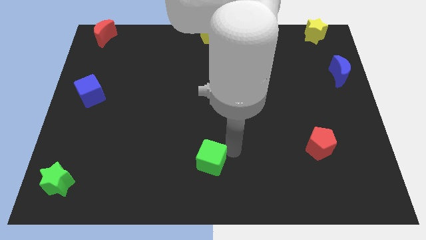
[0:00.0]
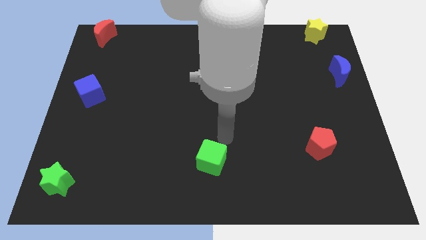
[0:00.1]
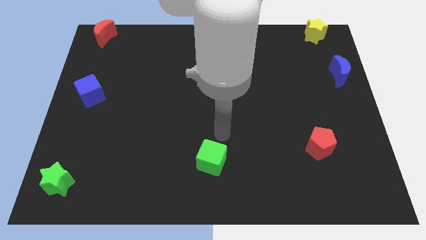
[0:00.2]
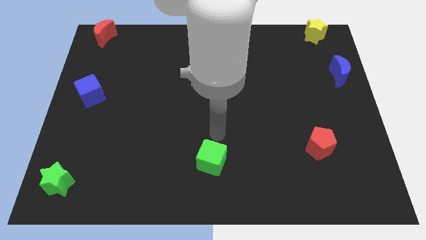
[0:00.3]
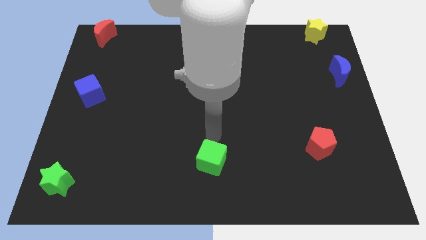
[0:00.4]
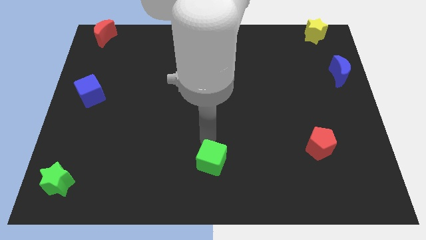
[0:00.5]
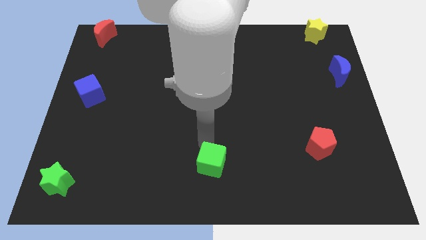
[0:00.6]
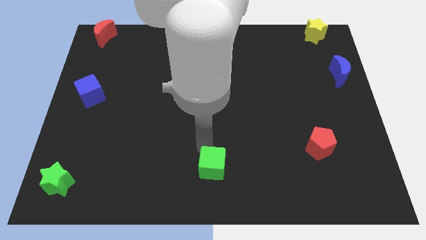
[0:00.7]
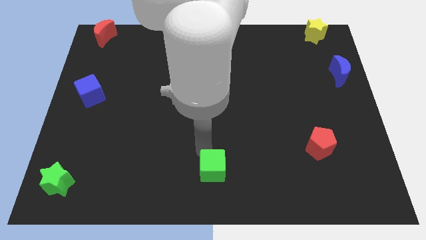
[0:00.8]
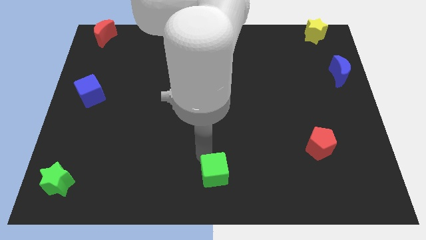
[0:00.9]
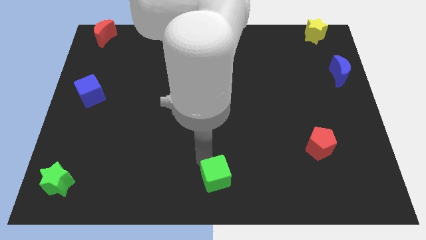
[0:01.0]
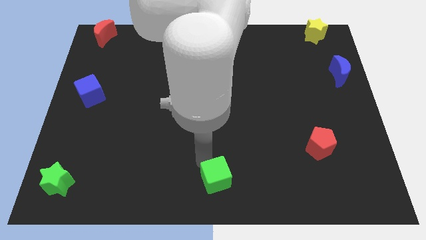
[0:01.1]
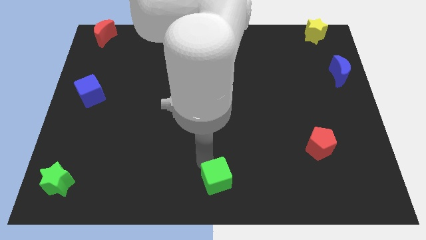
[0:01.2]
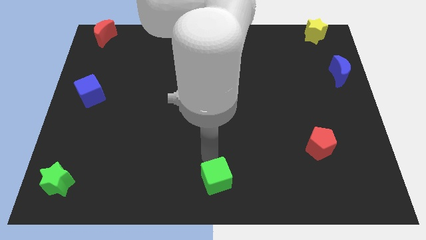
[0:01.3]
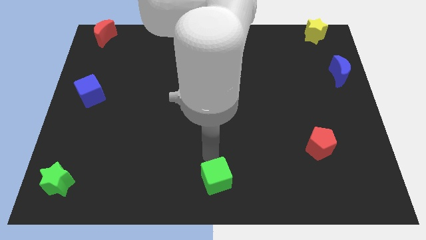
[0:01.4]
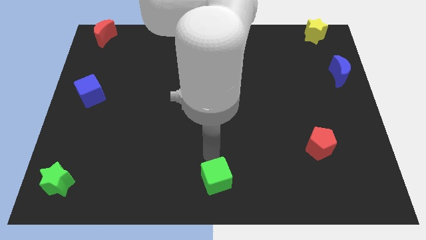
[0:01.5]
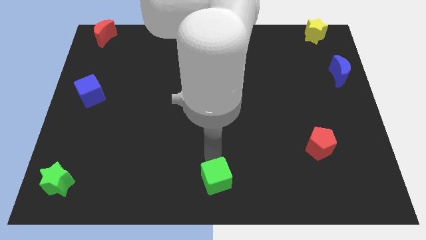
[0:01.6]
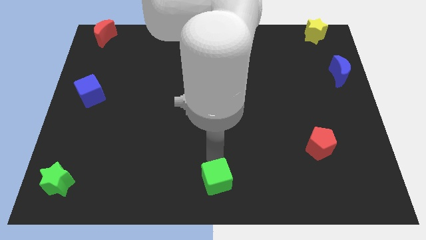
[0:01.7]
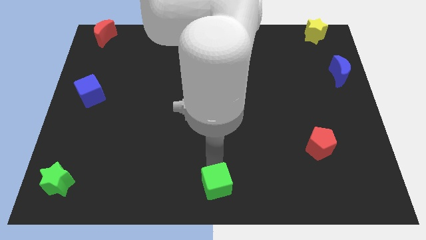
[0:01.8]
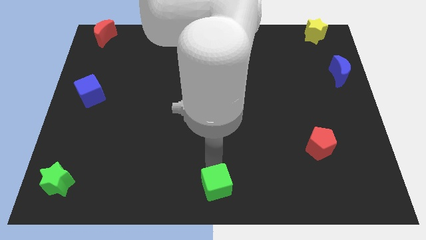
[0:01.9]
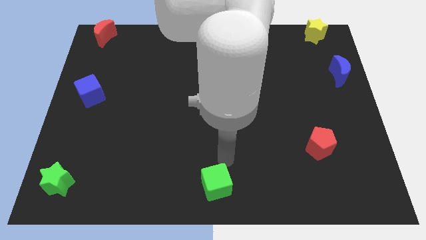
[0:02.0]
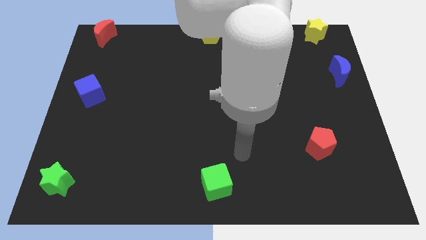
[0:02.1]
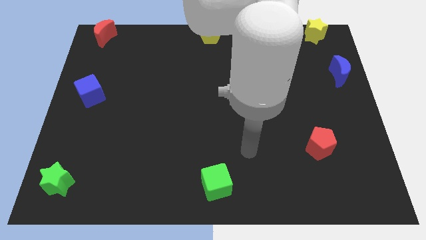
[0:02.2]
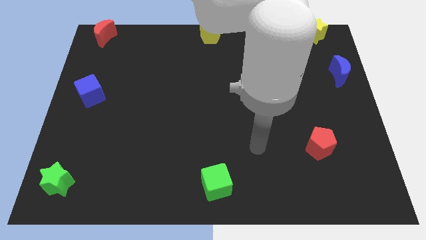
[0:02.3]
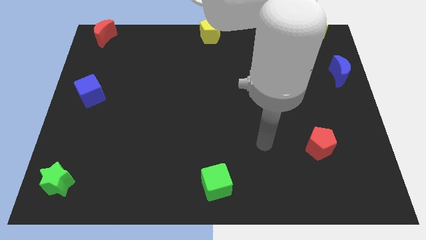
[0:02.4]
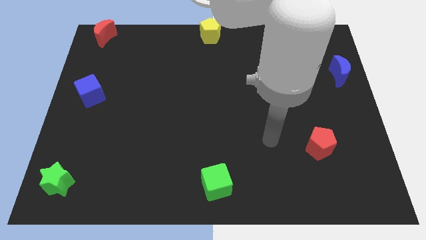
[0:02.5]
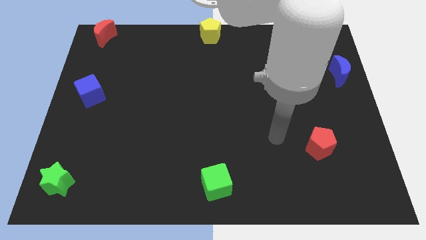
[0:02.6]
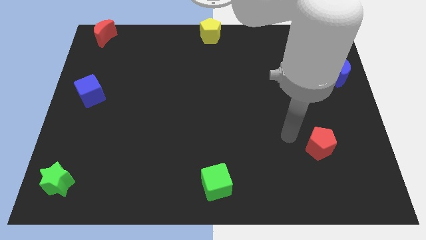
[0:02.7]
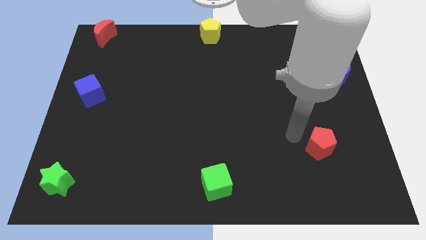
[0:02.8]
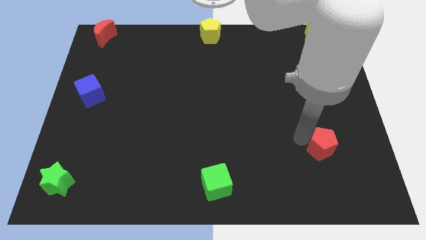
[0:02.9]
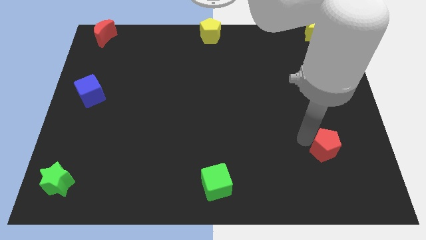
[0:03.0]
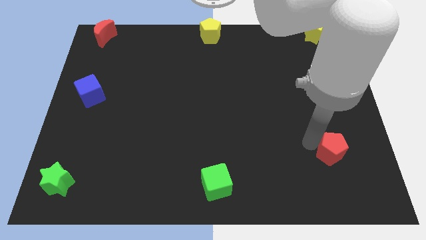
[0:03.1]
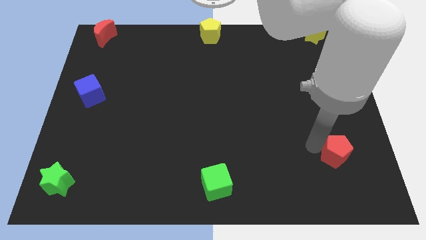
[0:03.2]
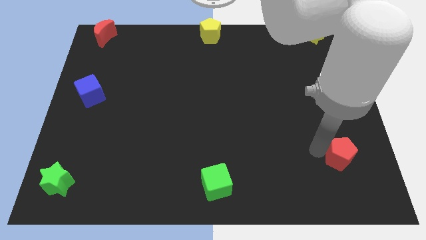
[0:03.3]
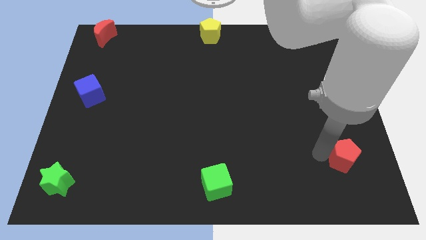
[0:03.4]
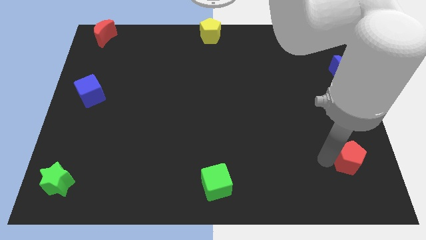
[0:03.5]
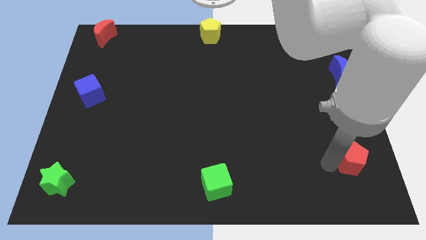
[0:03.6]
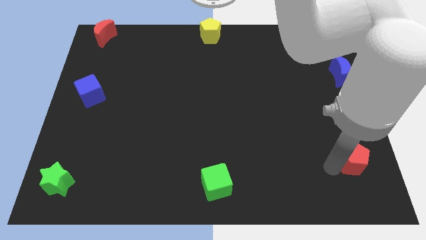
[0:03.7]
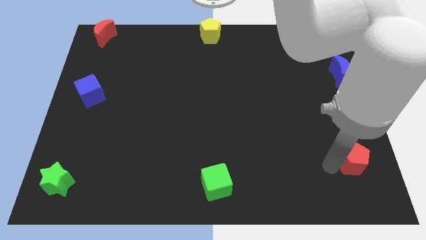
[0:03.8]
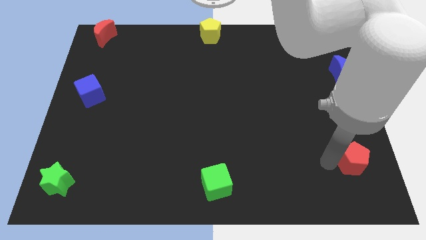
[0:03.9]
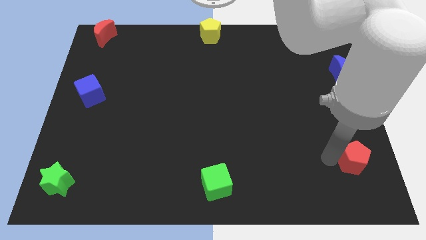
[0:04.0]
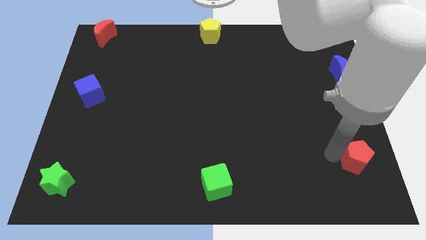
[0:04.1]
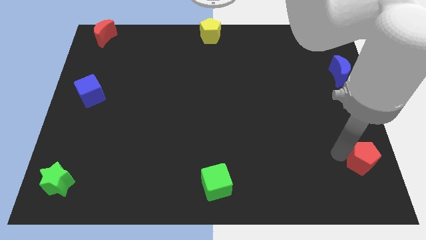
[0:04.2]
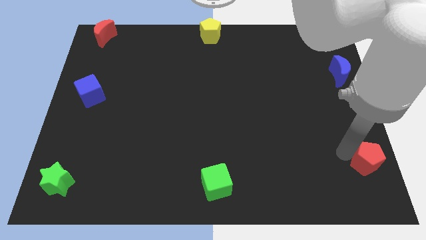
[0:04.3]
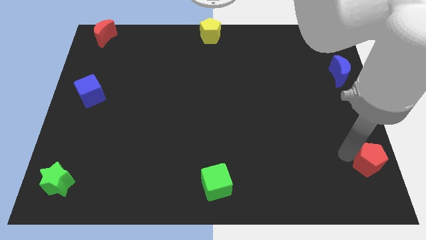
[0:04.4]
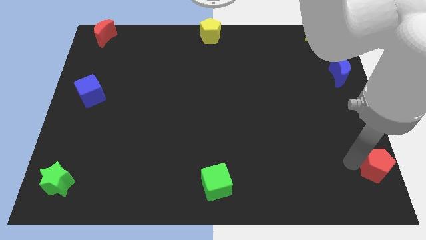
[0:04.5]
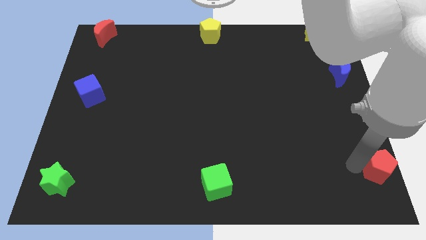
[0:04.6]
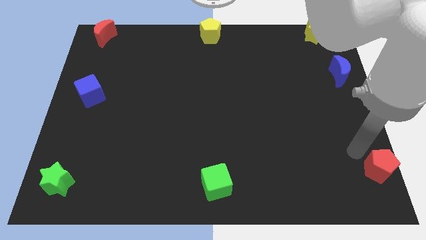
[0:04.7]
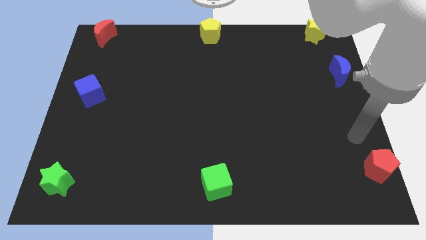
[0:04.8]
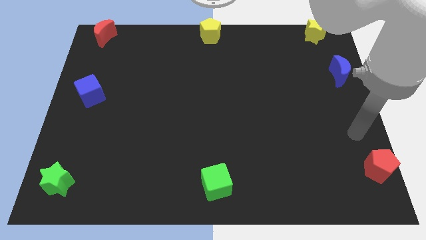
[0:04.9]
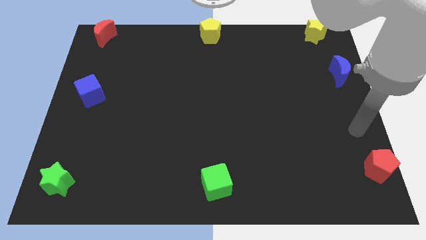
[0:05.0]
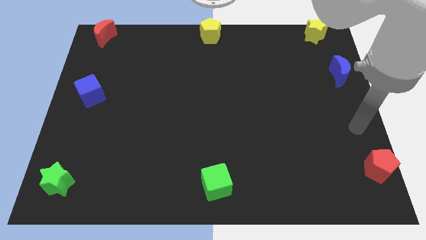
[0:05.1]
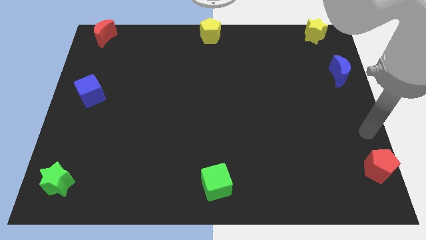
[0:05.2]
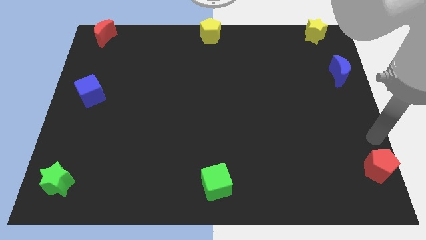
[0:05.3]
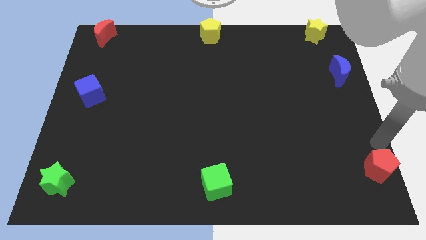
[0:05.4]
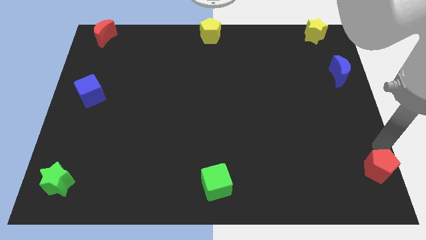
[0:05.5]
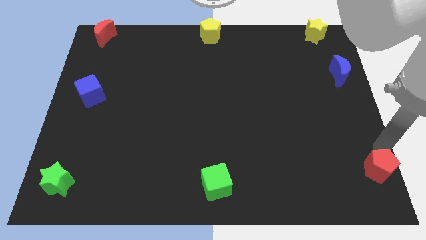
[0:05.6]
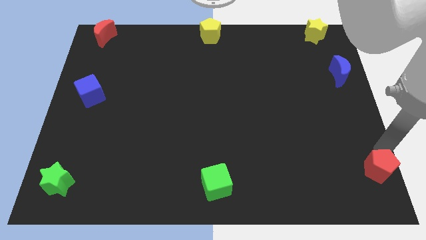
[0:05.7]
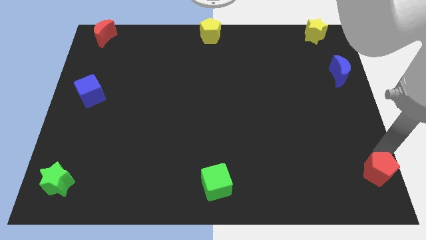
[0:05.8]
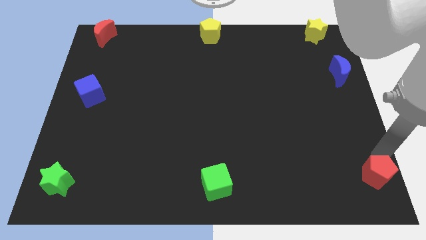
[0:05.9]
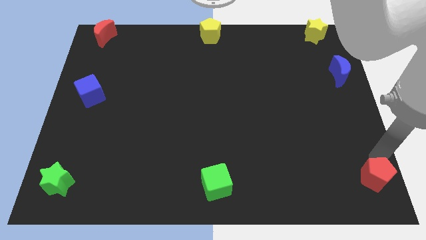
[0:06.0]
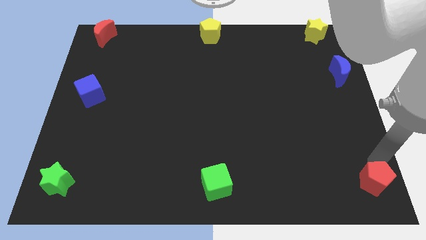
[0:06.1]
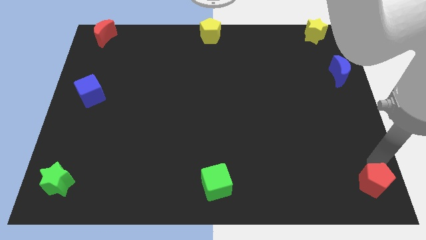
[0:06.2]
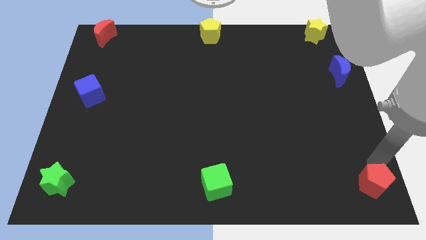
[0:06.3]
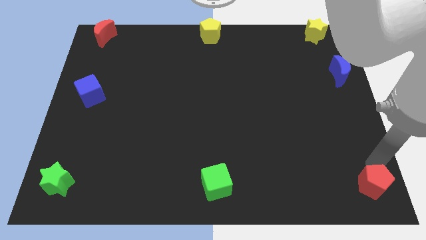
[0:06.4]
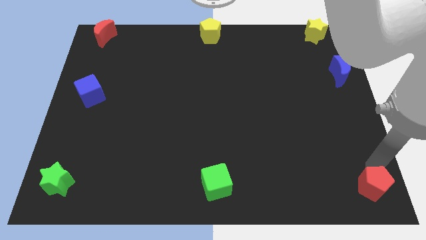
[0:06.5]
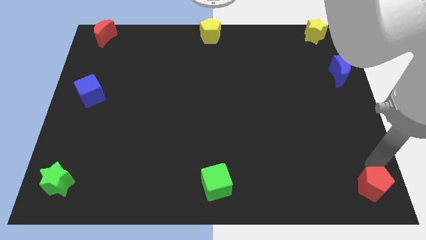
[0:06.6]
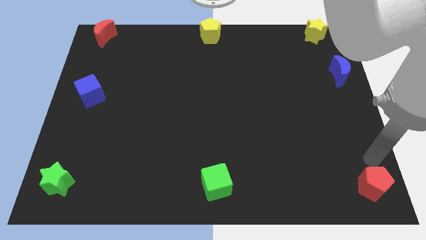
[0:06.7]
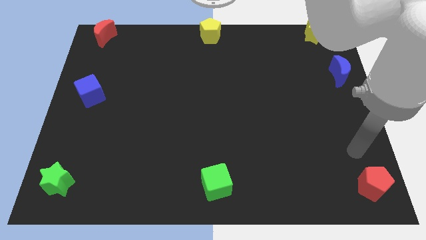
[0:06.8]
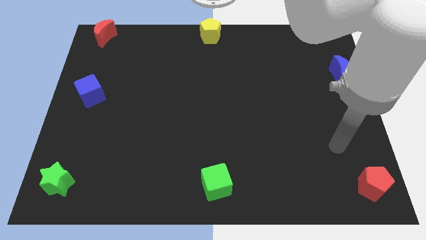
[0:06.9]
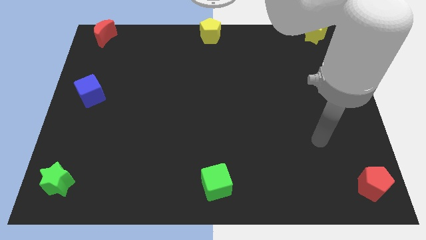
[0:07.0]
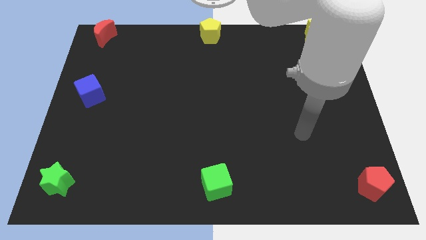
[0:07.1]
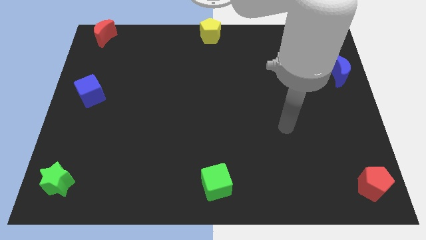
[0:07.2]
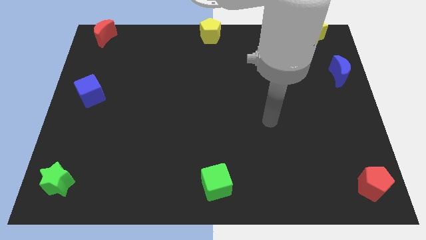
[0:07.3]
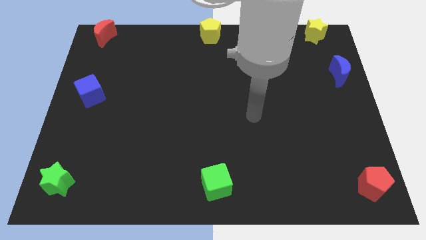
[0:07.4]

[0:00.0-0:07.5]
push the green cube and red pentagon towards the bottom side of the board

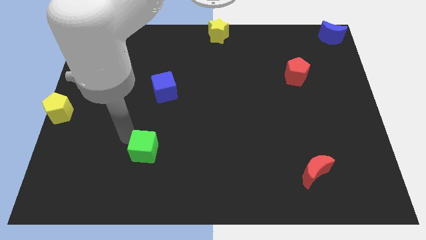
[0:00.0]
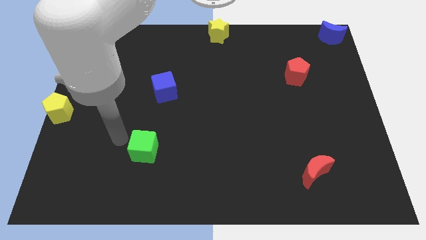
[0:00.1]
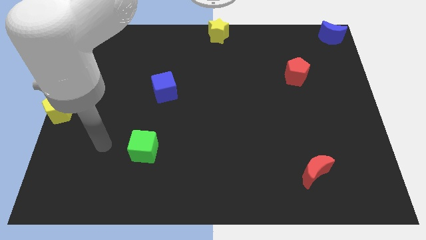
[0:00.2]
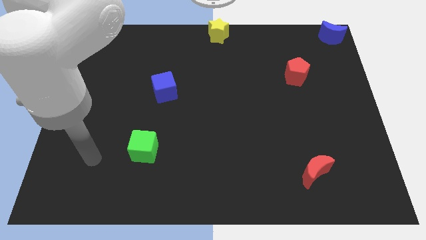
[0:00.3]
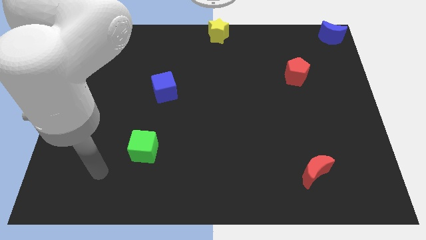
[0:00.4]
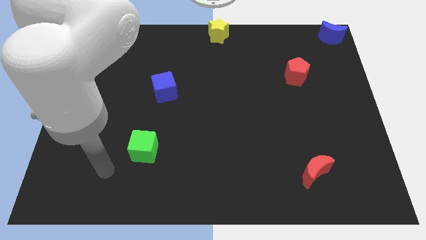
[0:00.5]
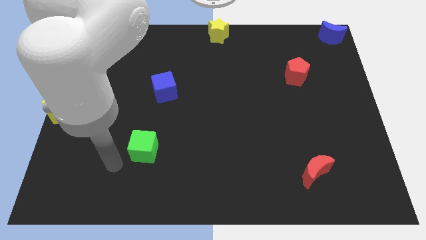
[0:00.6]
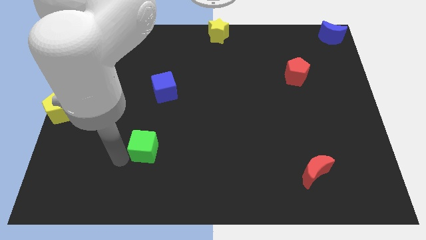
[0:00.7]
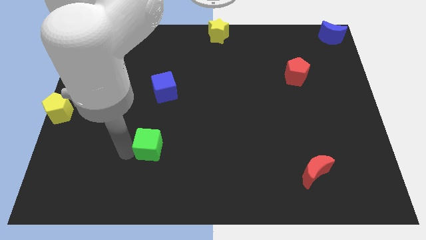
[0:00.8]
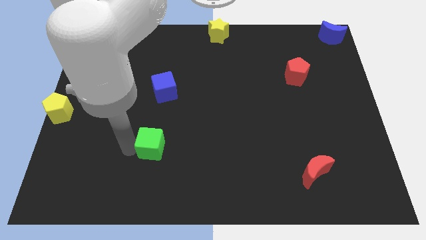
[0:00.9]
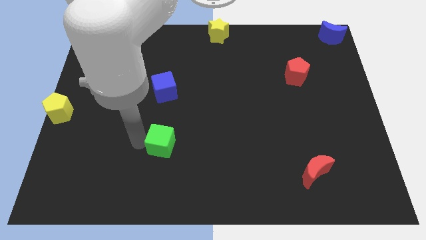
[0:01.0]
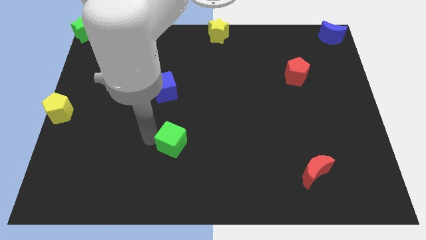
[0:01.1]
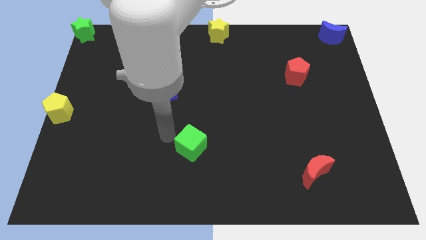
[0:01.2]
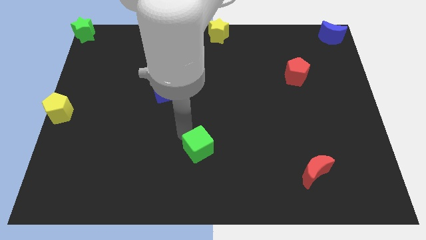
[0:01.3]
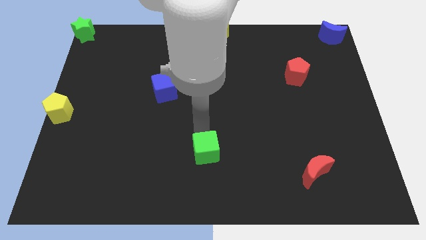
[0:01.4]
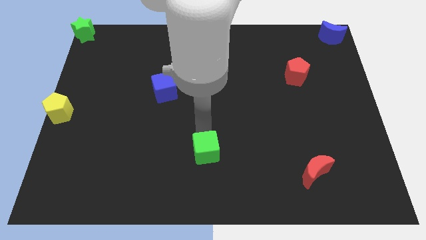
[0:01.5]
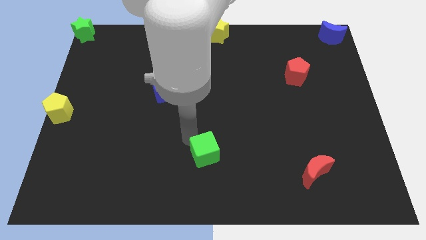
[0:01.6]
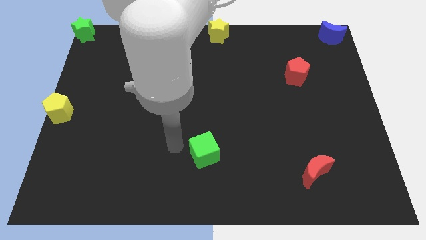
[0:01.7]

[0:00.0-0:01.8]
push the green cube towards the center of the board
